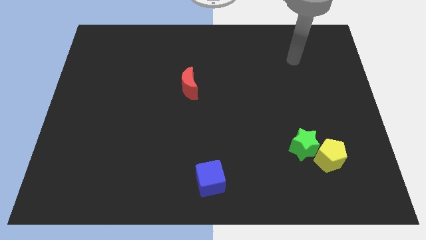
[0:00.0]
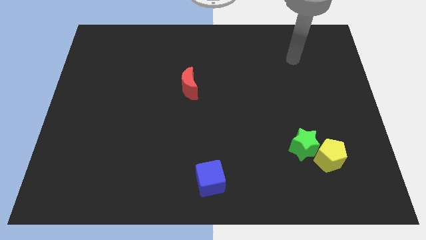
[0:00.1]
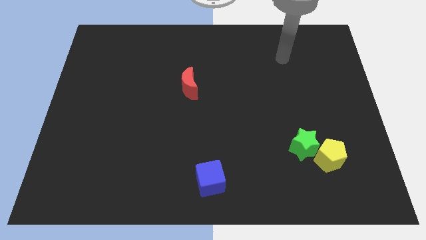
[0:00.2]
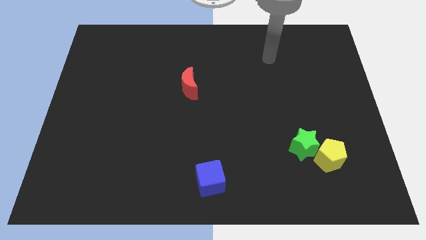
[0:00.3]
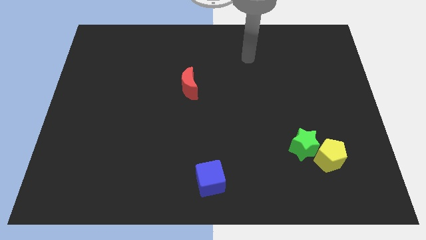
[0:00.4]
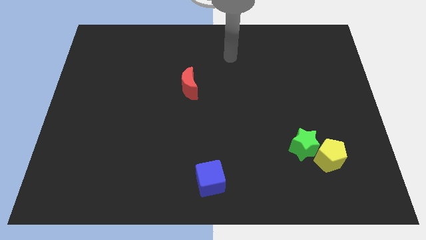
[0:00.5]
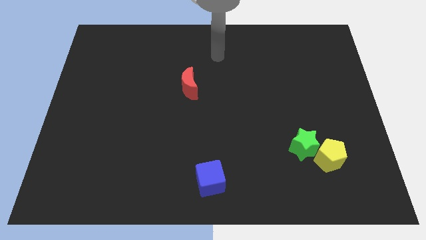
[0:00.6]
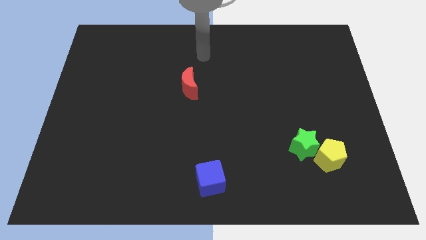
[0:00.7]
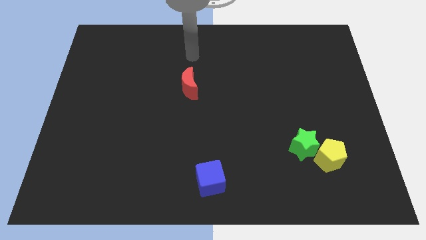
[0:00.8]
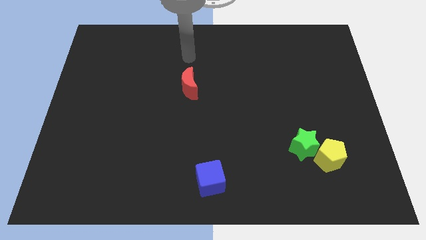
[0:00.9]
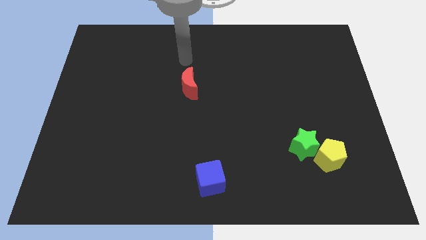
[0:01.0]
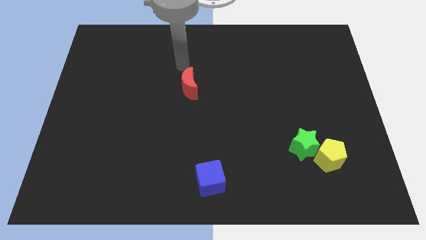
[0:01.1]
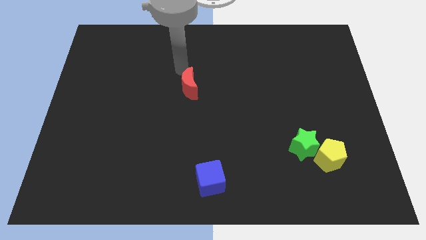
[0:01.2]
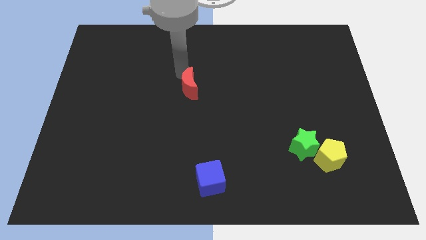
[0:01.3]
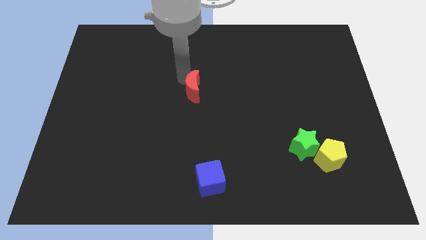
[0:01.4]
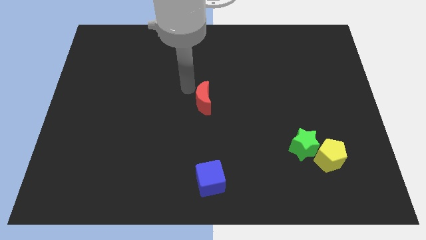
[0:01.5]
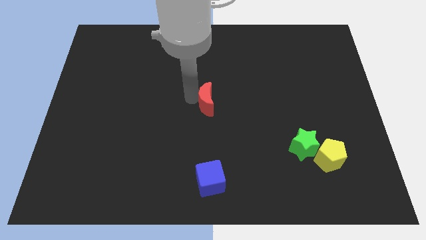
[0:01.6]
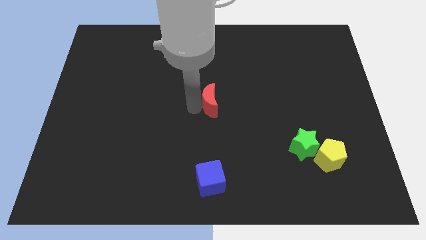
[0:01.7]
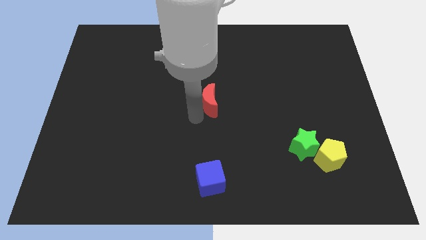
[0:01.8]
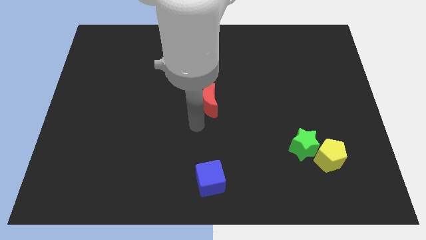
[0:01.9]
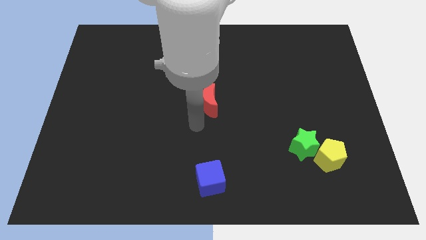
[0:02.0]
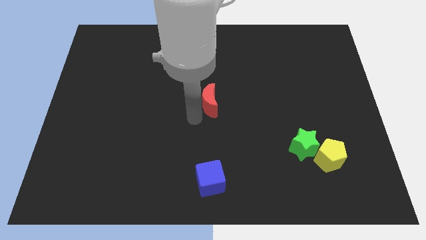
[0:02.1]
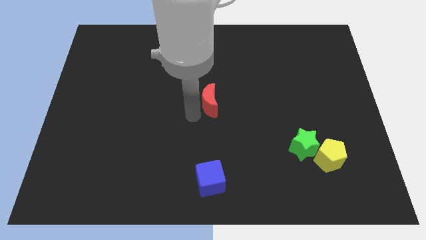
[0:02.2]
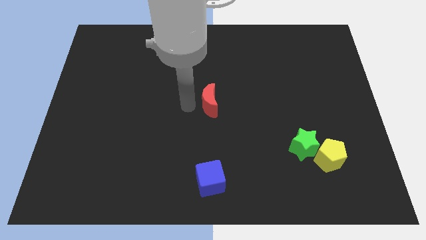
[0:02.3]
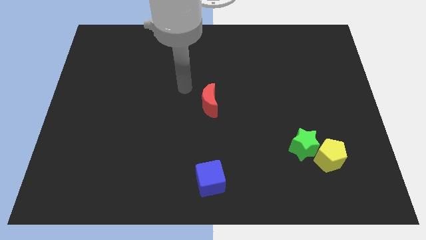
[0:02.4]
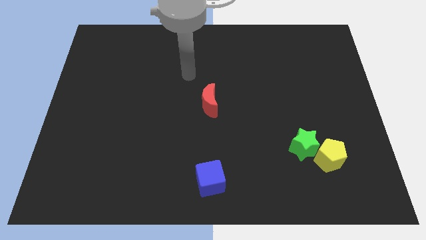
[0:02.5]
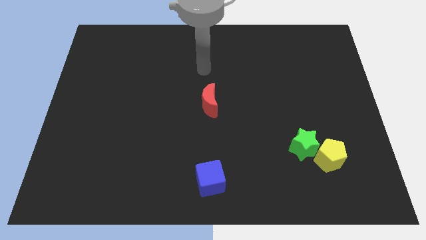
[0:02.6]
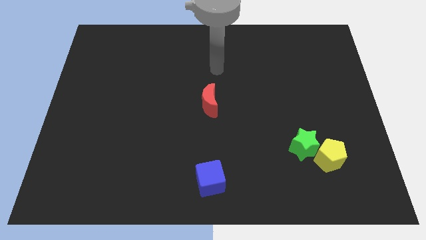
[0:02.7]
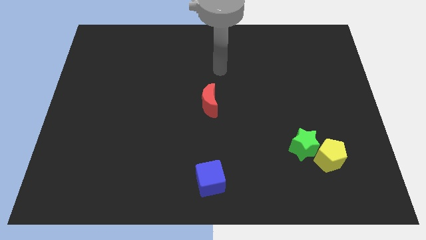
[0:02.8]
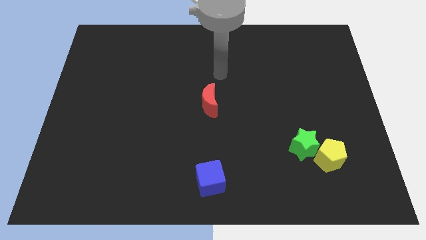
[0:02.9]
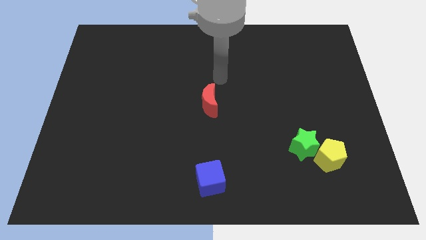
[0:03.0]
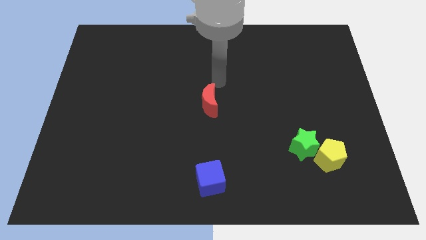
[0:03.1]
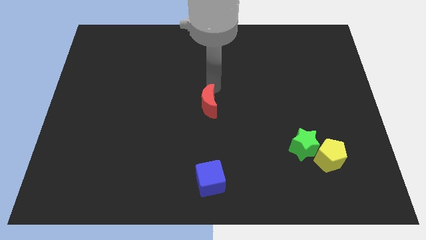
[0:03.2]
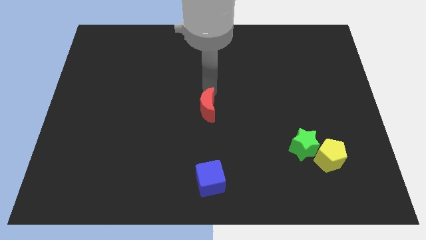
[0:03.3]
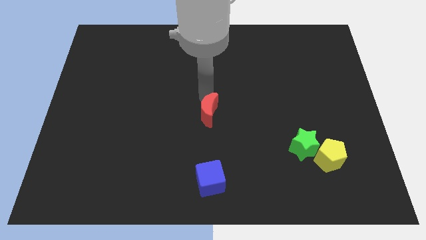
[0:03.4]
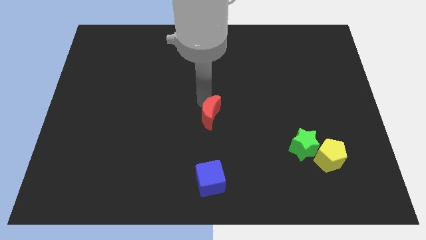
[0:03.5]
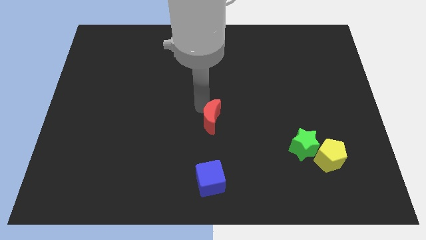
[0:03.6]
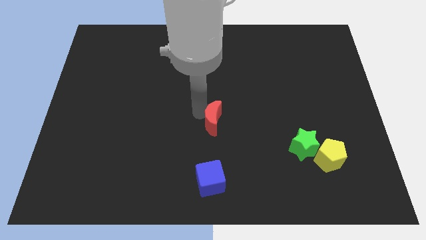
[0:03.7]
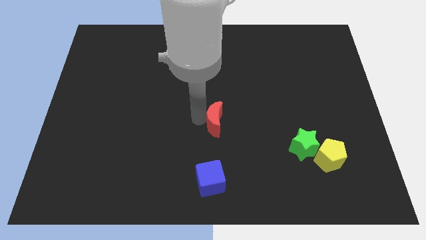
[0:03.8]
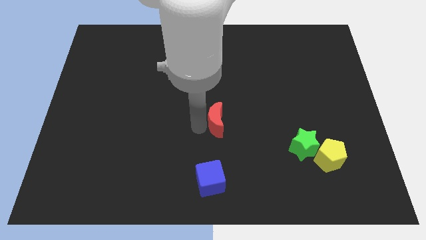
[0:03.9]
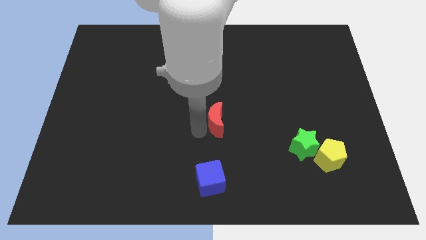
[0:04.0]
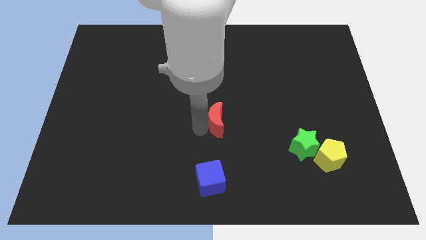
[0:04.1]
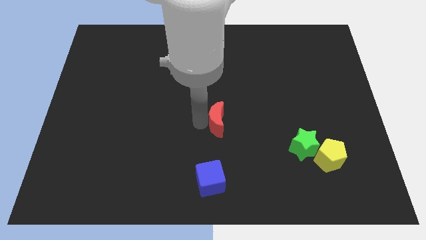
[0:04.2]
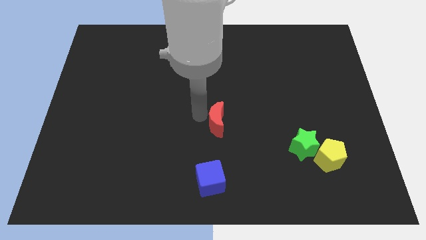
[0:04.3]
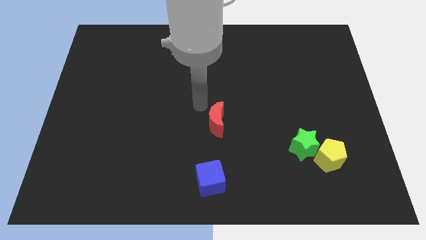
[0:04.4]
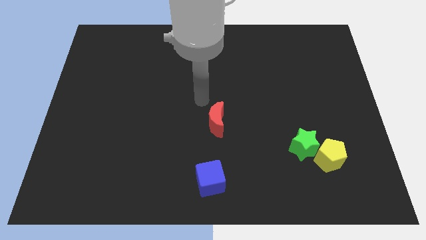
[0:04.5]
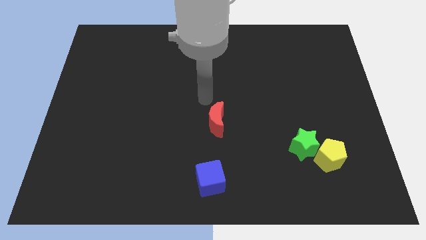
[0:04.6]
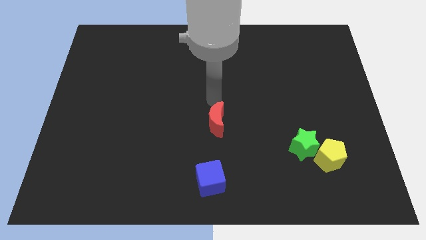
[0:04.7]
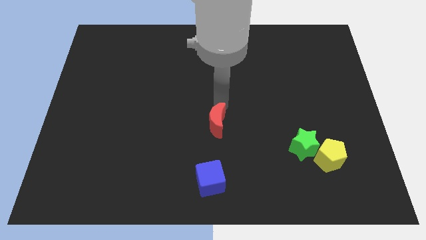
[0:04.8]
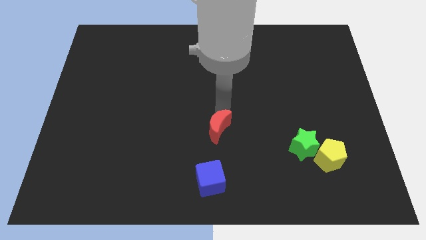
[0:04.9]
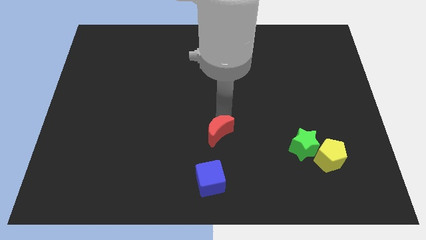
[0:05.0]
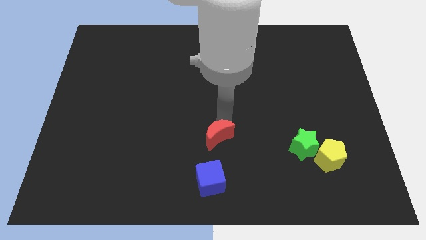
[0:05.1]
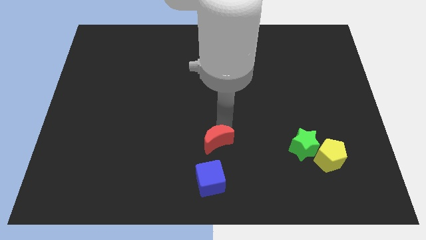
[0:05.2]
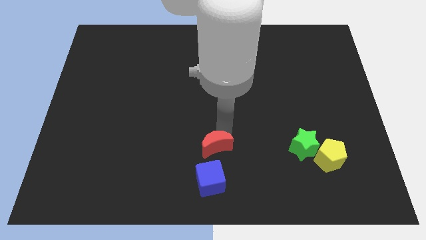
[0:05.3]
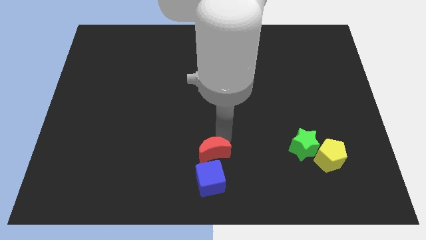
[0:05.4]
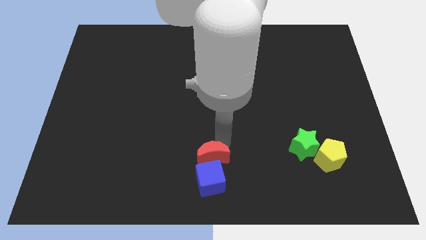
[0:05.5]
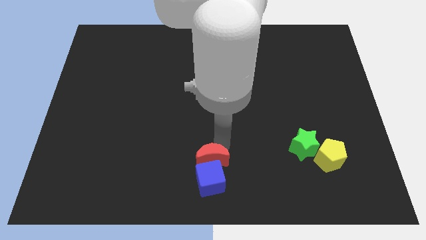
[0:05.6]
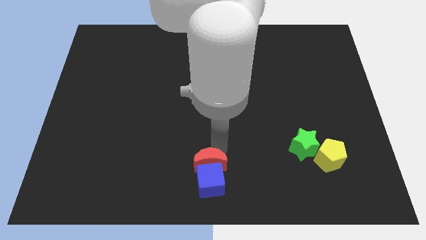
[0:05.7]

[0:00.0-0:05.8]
push the red moon towards the blue block

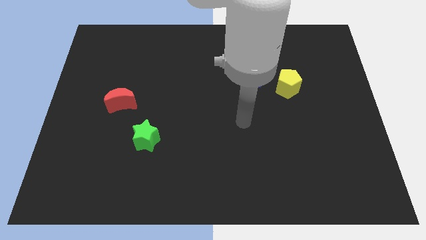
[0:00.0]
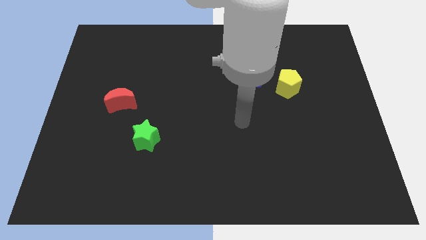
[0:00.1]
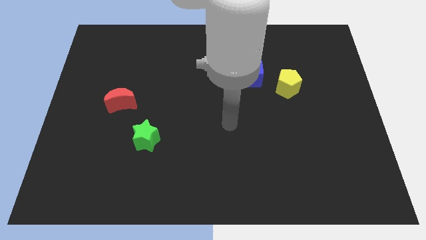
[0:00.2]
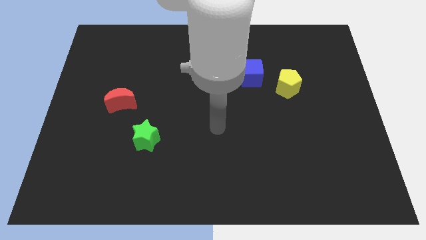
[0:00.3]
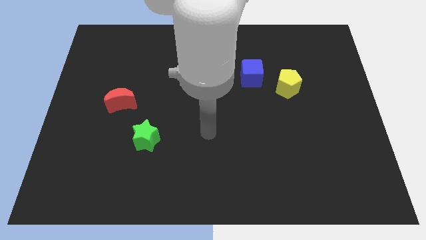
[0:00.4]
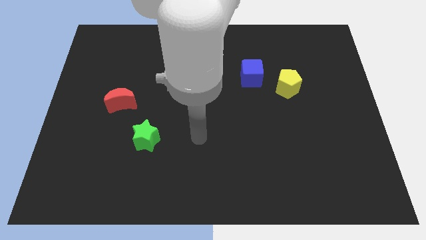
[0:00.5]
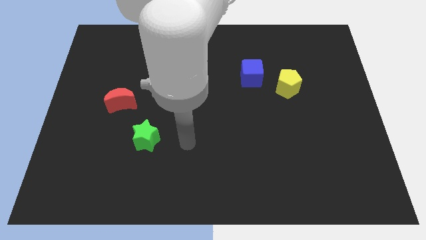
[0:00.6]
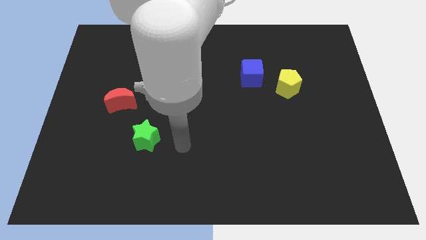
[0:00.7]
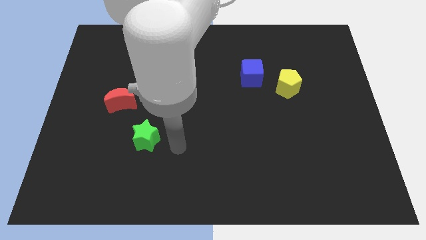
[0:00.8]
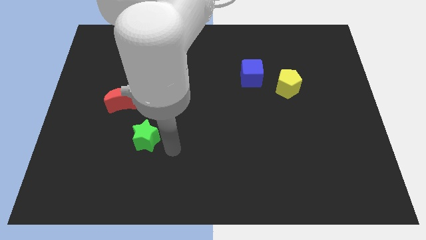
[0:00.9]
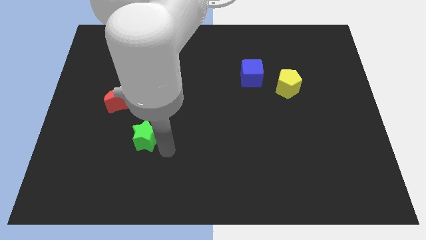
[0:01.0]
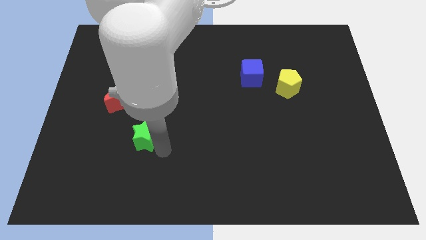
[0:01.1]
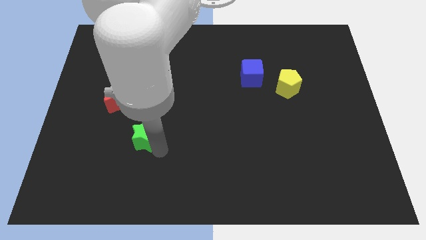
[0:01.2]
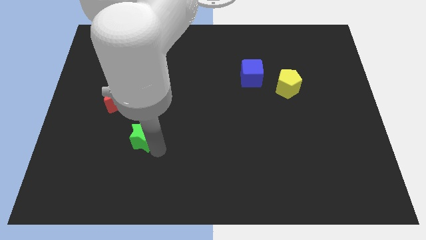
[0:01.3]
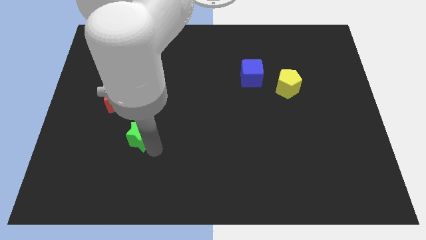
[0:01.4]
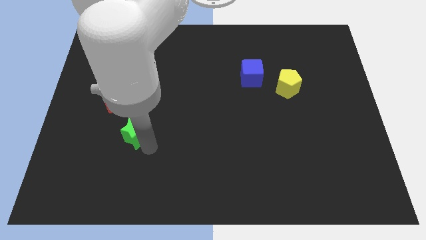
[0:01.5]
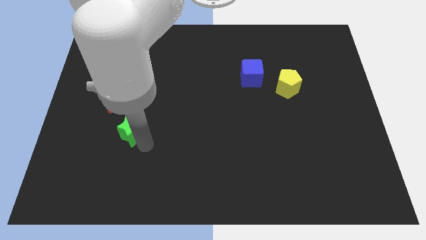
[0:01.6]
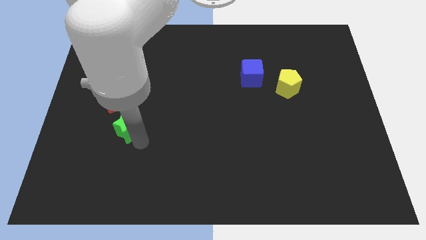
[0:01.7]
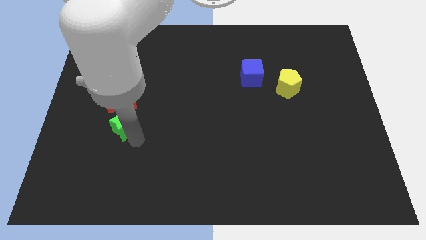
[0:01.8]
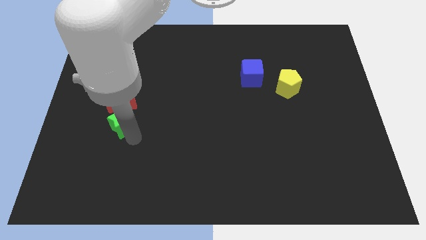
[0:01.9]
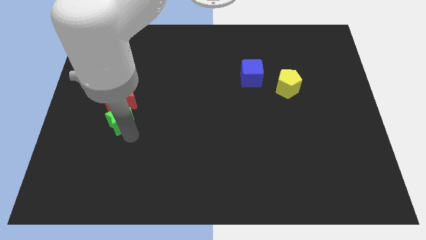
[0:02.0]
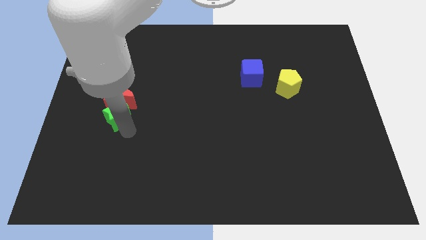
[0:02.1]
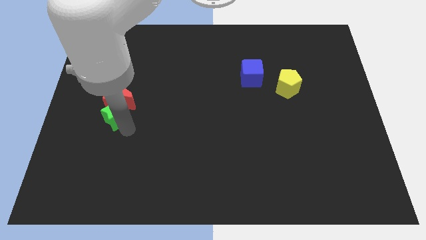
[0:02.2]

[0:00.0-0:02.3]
put the green star close to the red block

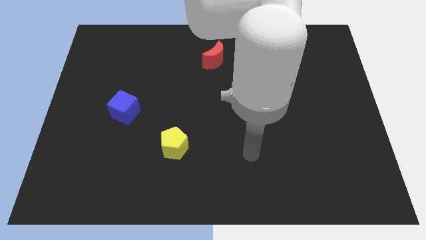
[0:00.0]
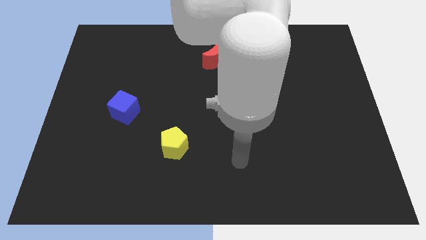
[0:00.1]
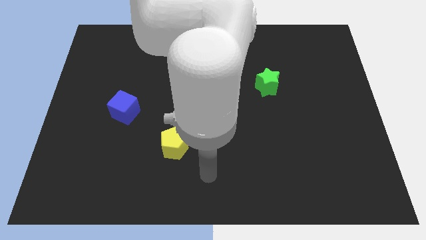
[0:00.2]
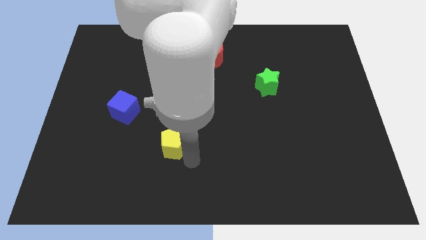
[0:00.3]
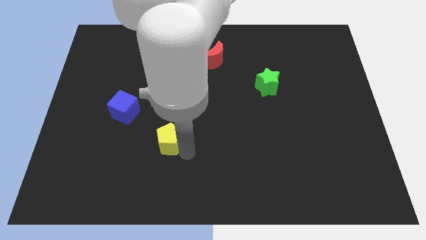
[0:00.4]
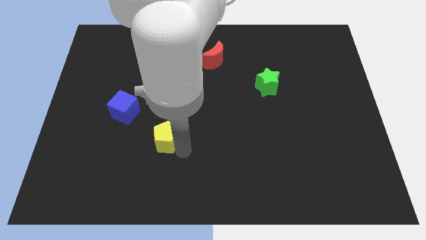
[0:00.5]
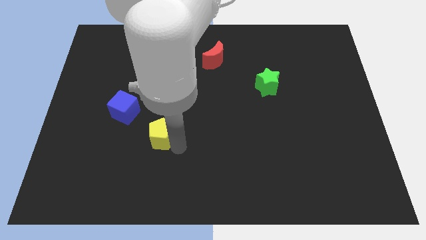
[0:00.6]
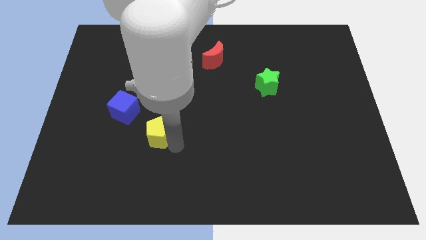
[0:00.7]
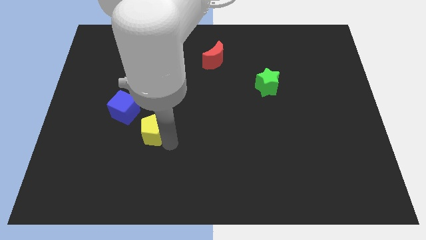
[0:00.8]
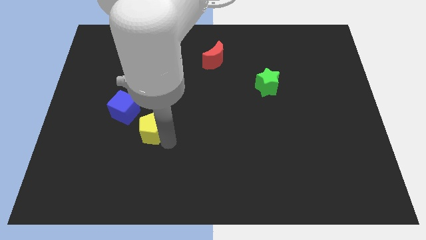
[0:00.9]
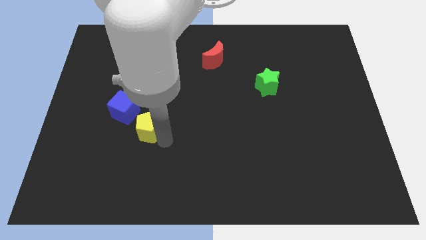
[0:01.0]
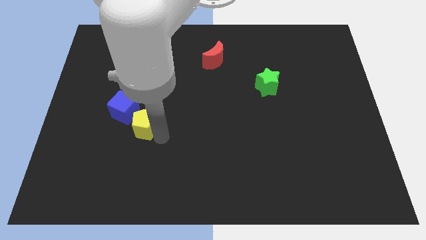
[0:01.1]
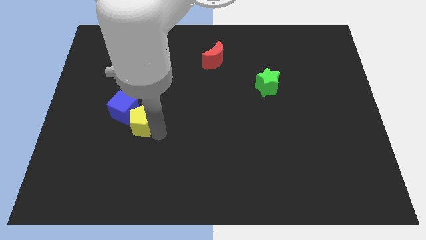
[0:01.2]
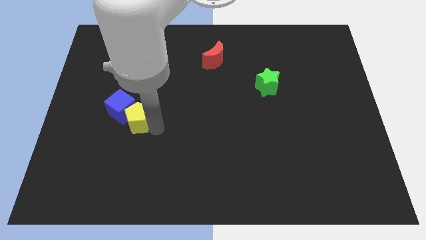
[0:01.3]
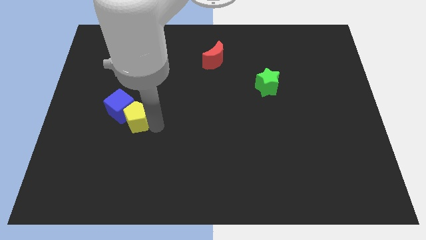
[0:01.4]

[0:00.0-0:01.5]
push the yellow pentagon to the cube
